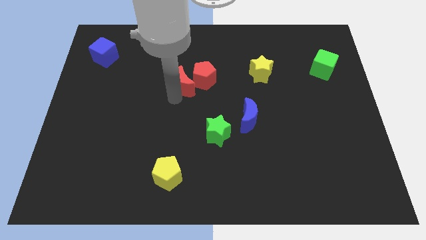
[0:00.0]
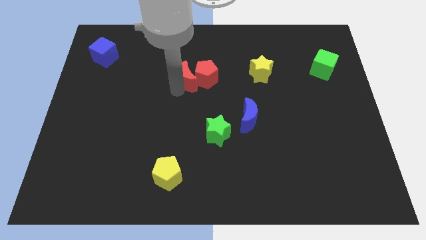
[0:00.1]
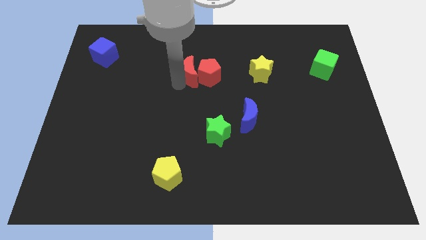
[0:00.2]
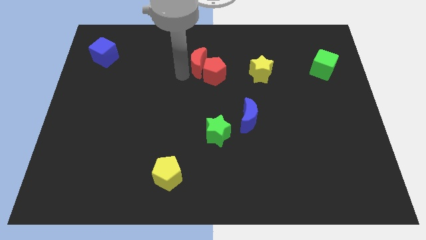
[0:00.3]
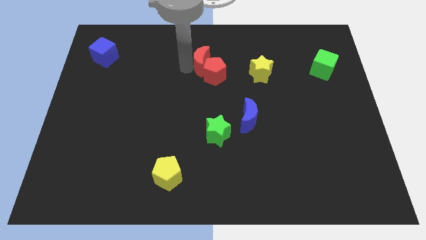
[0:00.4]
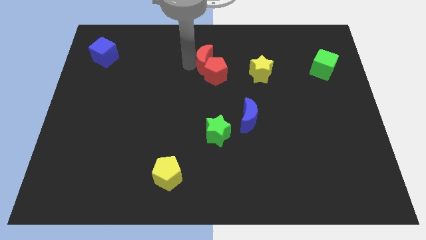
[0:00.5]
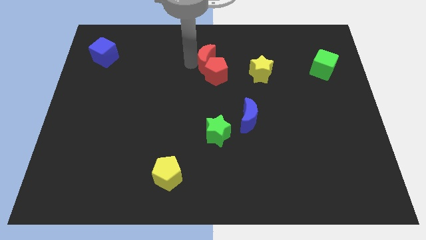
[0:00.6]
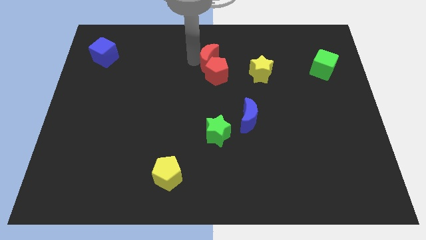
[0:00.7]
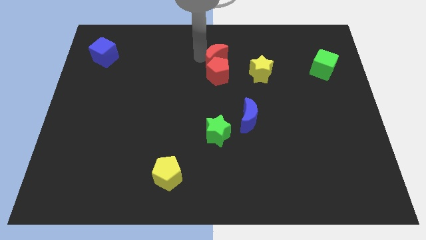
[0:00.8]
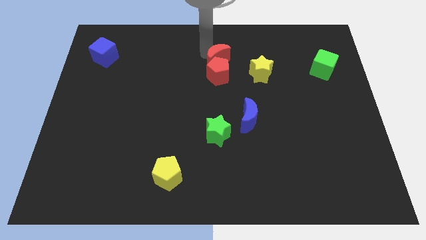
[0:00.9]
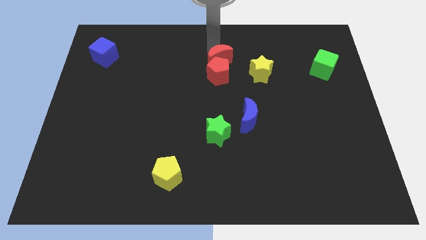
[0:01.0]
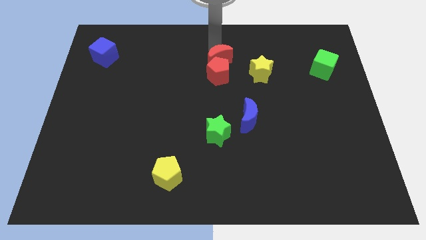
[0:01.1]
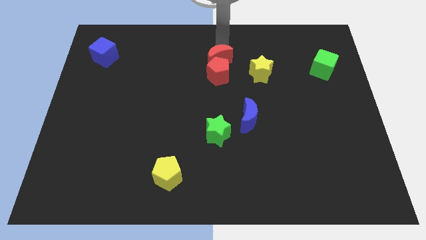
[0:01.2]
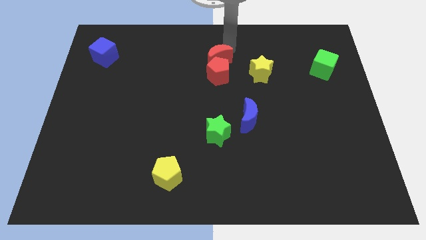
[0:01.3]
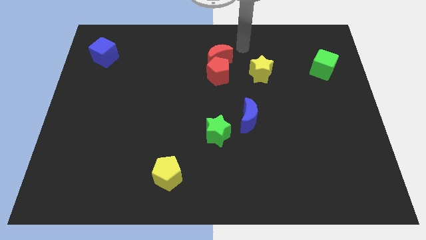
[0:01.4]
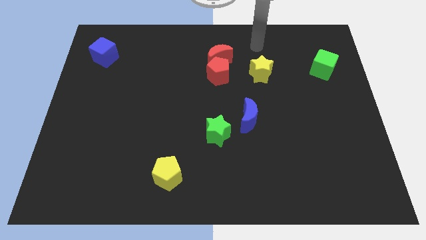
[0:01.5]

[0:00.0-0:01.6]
move red moon into the red pentagon

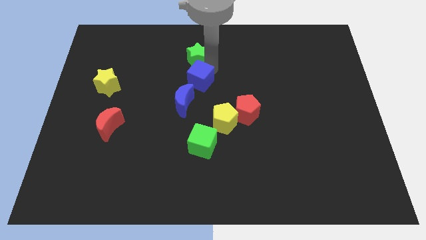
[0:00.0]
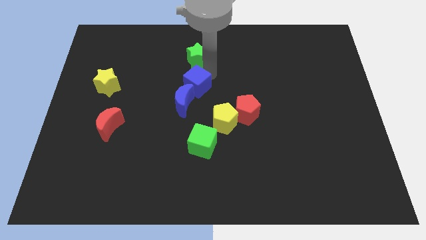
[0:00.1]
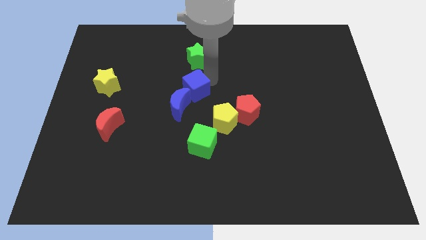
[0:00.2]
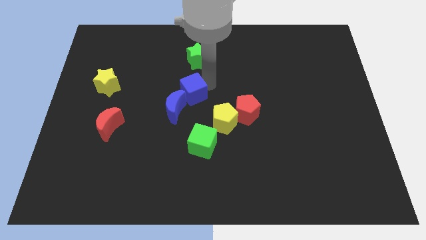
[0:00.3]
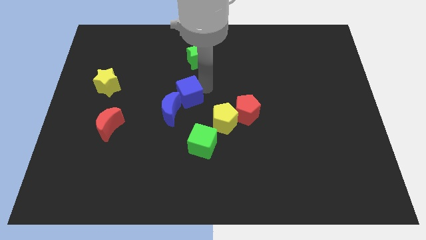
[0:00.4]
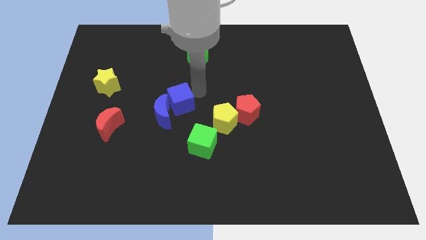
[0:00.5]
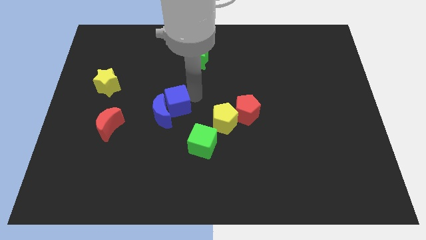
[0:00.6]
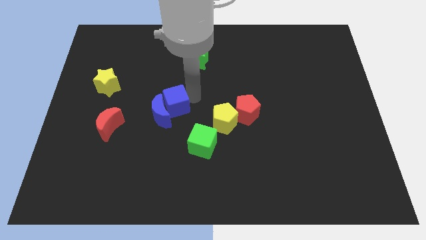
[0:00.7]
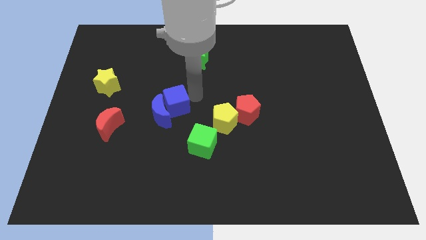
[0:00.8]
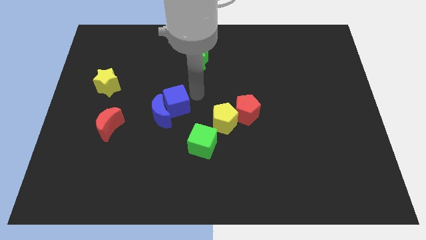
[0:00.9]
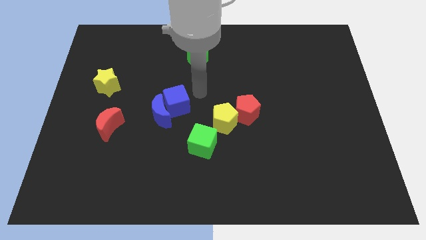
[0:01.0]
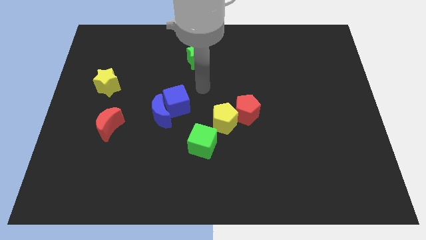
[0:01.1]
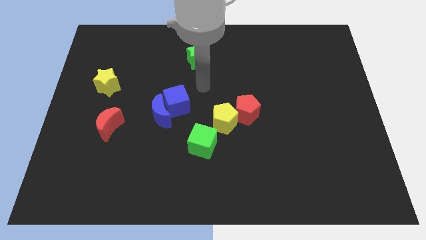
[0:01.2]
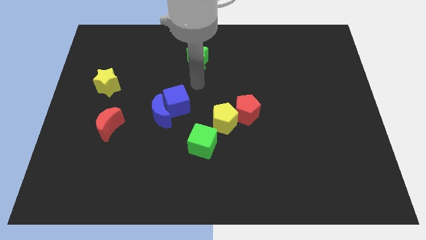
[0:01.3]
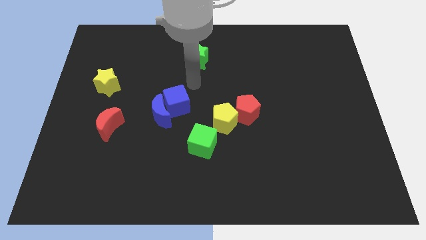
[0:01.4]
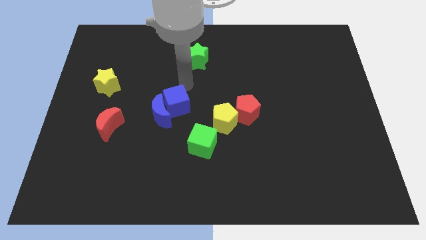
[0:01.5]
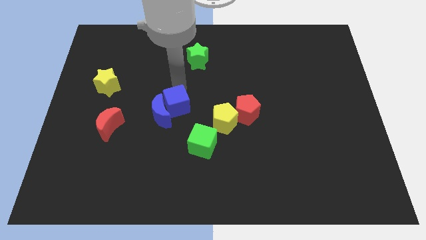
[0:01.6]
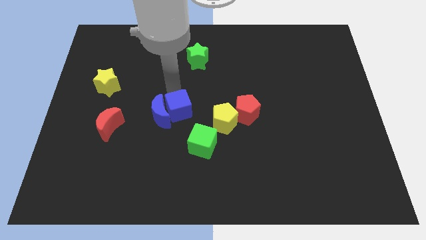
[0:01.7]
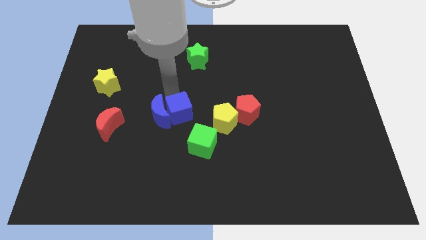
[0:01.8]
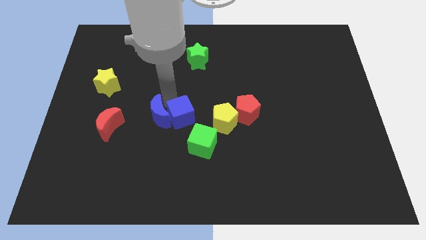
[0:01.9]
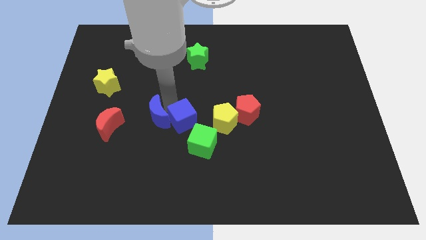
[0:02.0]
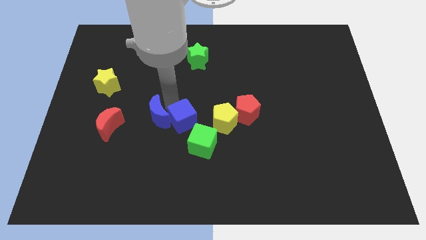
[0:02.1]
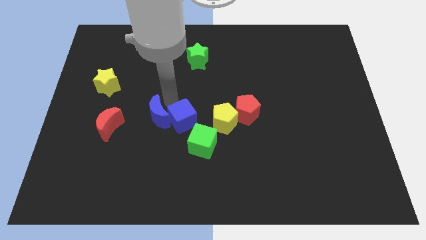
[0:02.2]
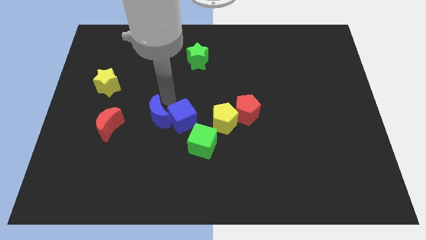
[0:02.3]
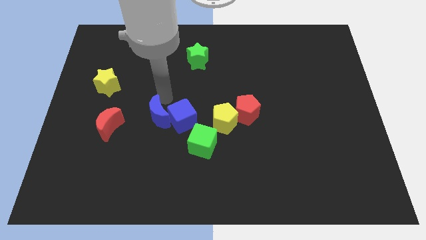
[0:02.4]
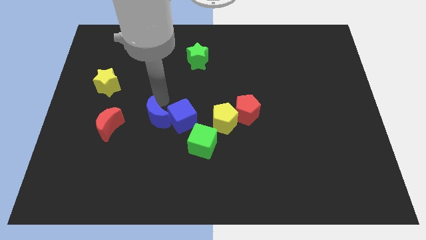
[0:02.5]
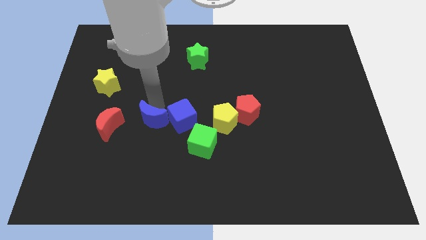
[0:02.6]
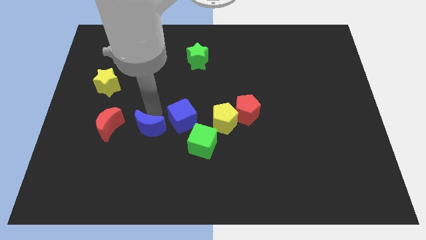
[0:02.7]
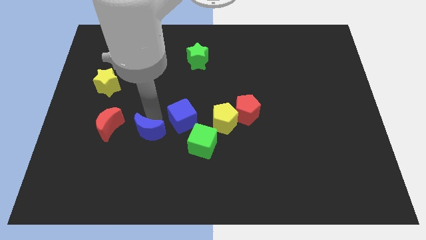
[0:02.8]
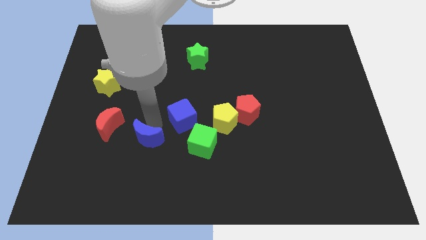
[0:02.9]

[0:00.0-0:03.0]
push the blue blocks towards the bottom side of the board

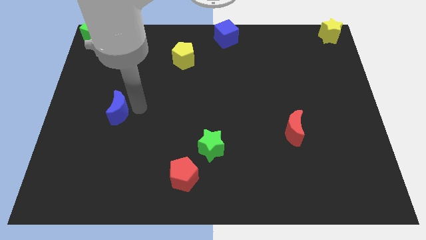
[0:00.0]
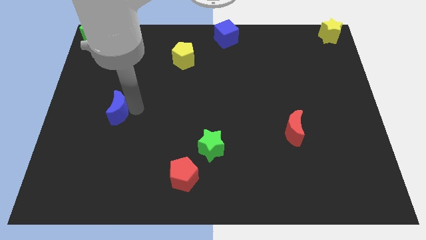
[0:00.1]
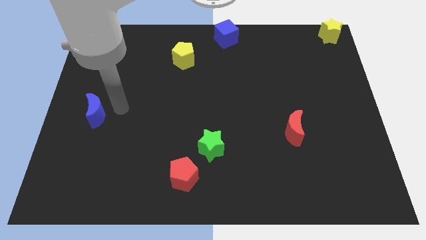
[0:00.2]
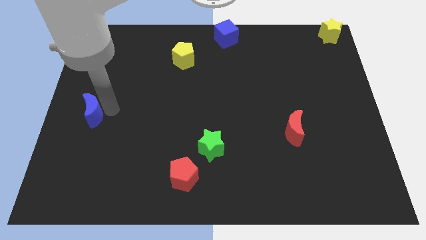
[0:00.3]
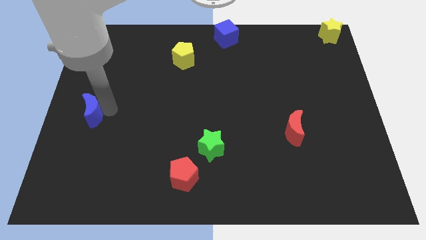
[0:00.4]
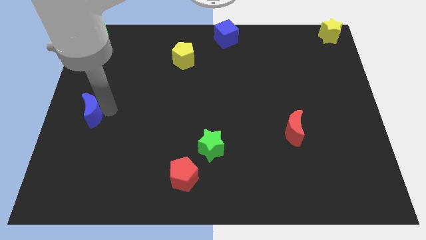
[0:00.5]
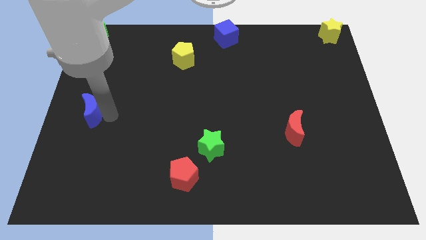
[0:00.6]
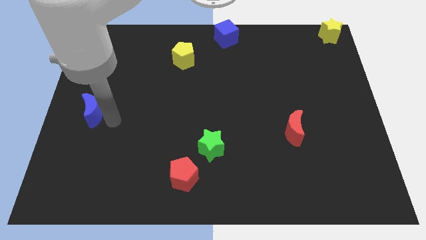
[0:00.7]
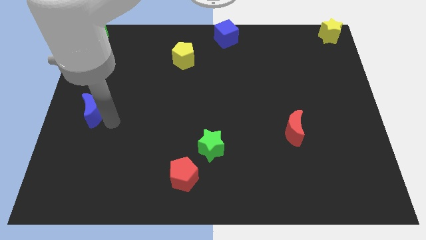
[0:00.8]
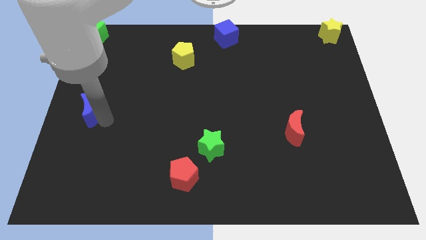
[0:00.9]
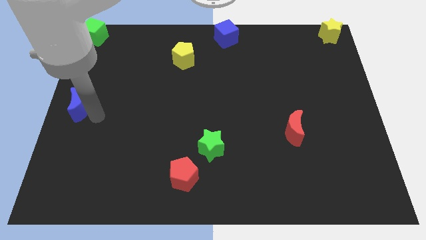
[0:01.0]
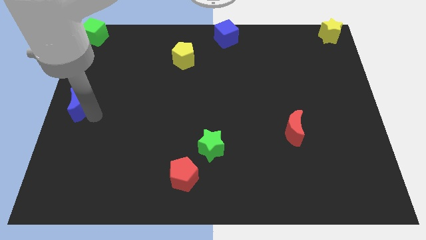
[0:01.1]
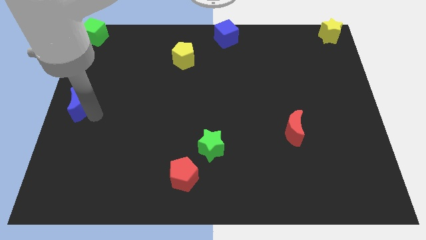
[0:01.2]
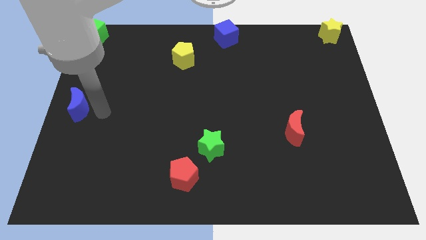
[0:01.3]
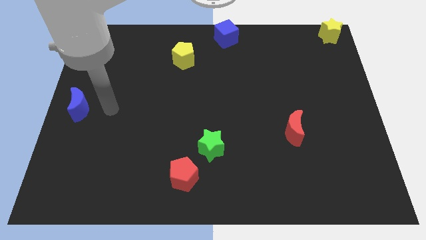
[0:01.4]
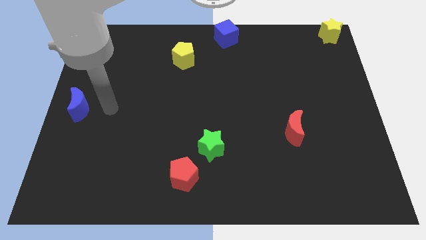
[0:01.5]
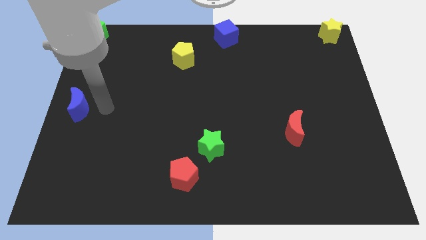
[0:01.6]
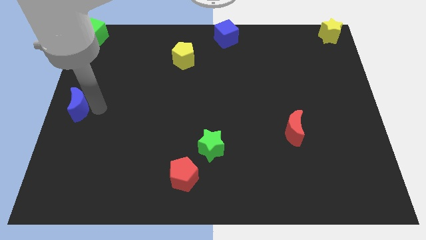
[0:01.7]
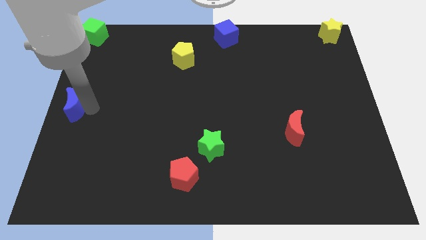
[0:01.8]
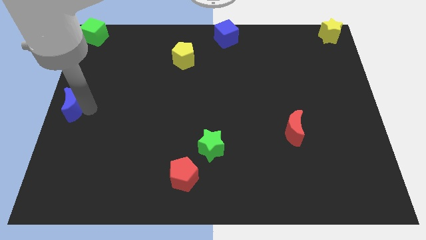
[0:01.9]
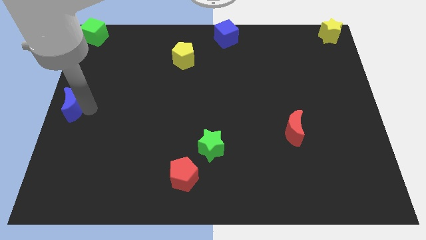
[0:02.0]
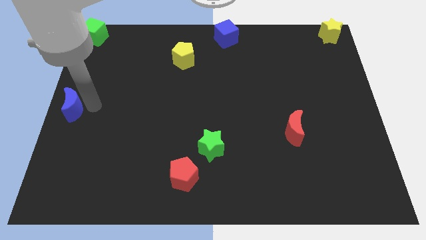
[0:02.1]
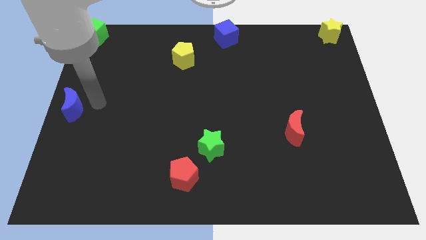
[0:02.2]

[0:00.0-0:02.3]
place the blue moon at the center left of the board

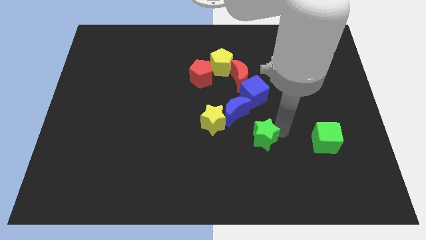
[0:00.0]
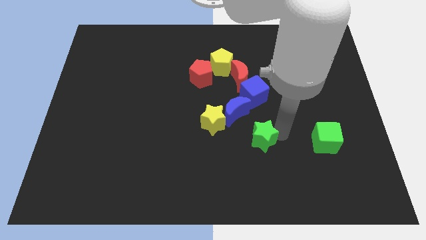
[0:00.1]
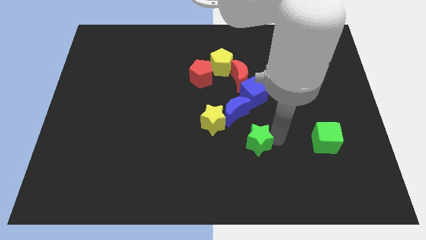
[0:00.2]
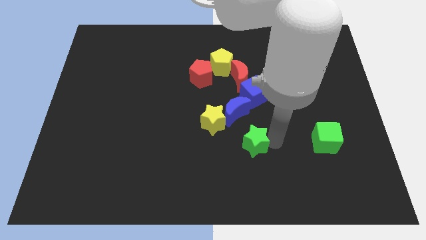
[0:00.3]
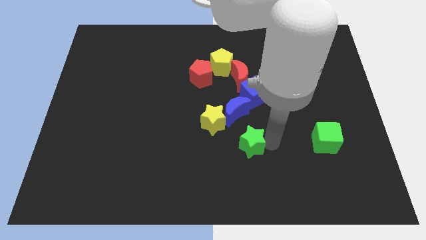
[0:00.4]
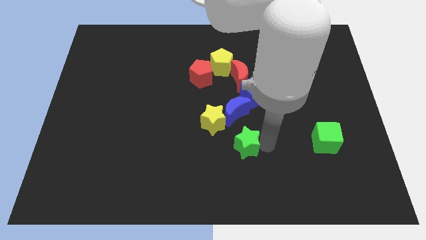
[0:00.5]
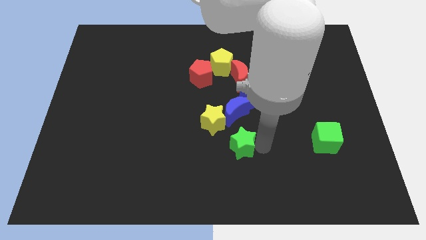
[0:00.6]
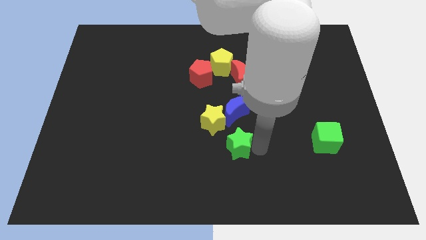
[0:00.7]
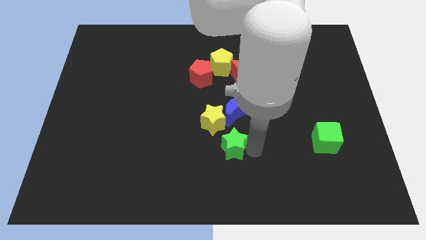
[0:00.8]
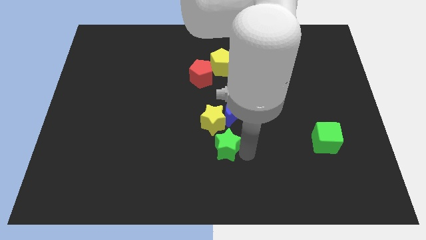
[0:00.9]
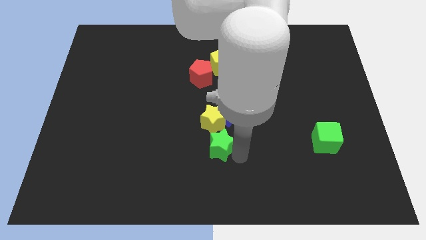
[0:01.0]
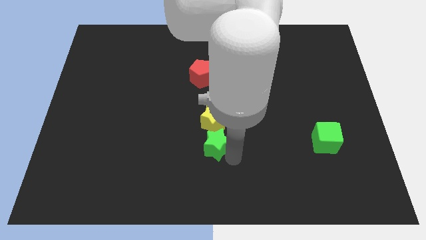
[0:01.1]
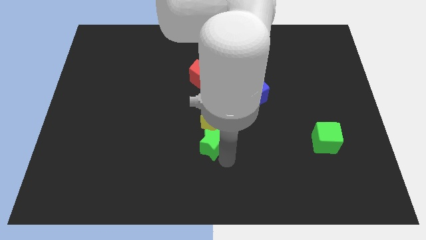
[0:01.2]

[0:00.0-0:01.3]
put the green star at the bottom of yellow star

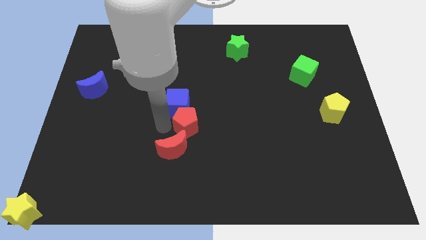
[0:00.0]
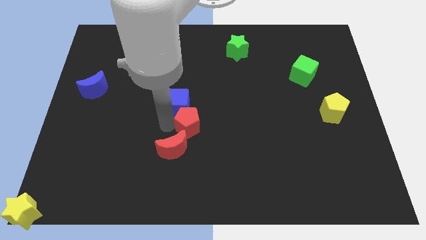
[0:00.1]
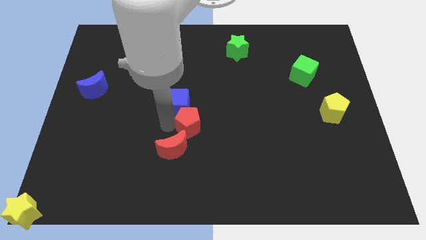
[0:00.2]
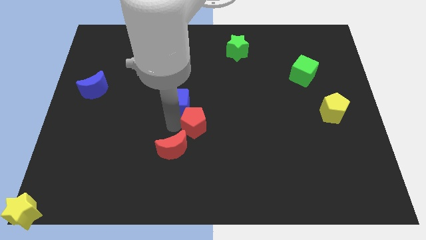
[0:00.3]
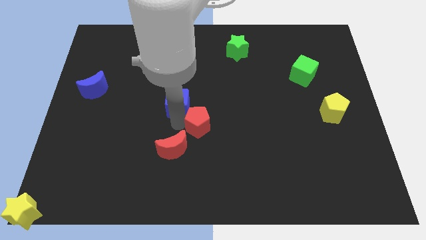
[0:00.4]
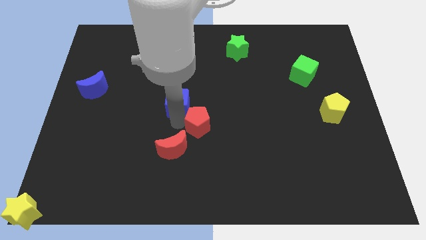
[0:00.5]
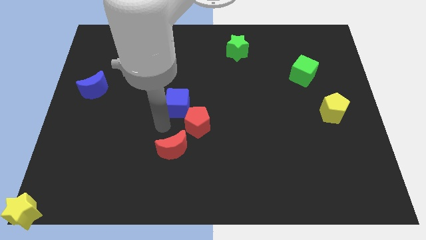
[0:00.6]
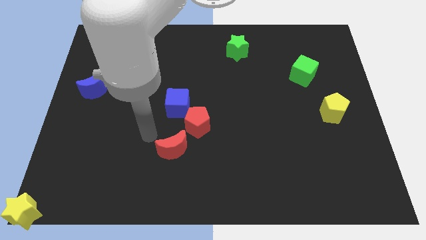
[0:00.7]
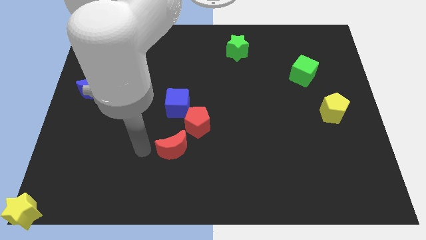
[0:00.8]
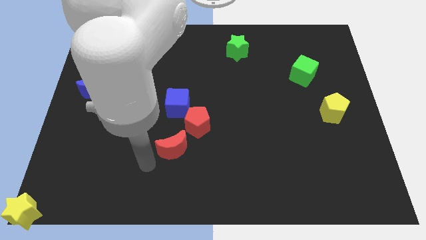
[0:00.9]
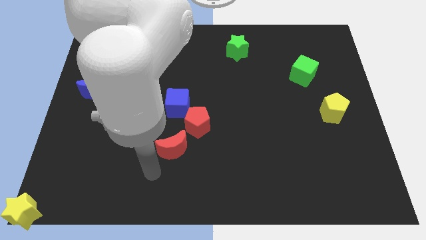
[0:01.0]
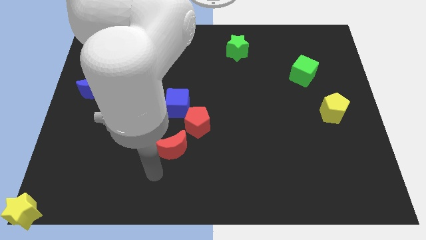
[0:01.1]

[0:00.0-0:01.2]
push red pentagon slightly right to the board
